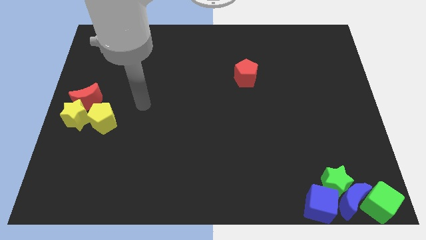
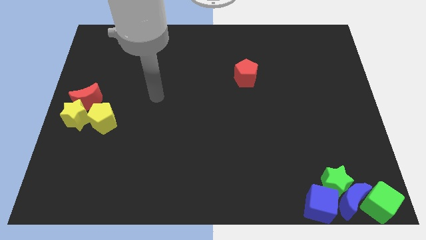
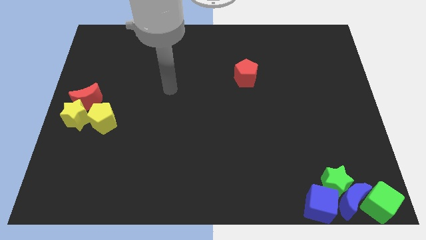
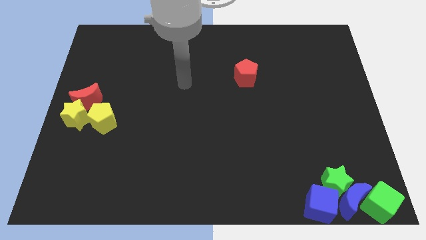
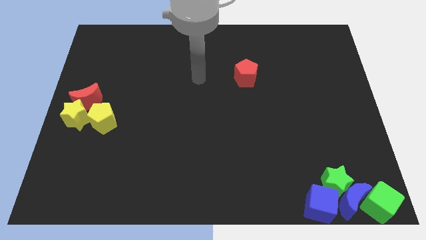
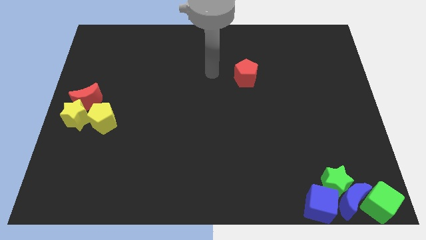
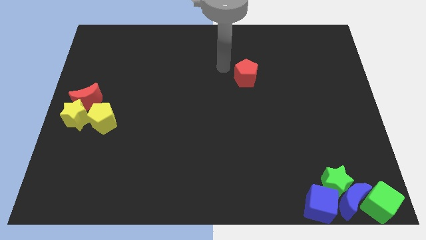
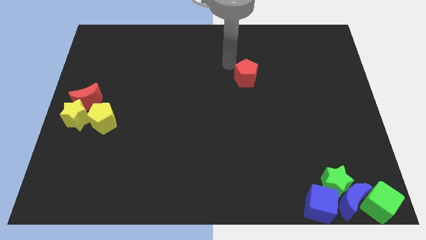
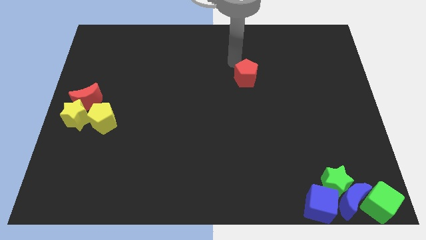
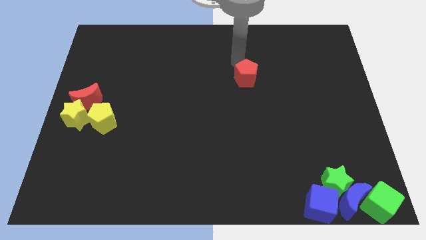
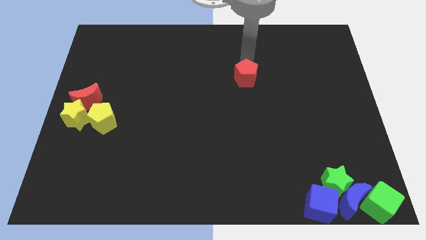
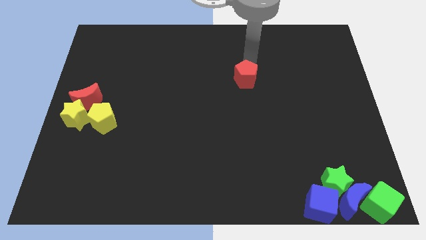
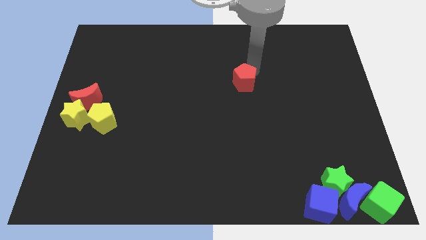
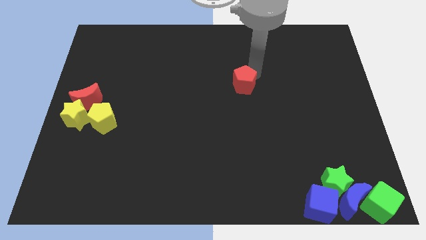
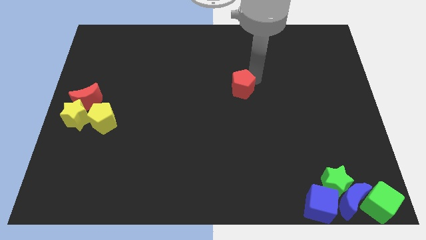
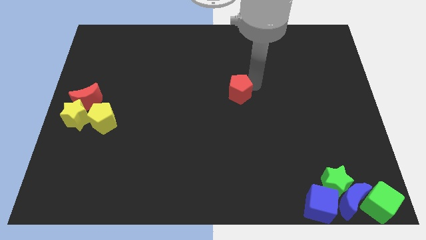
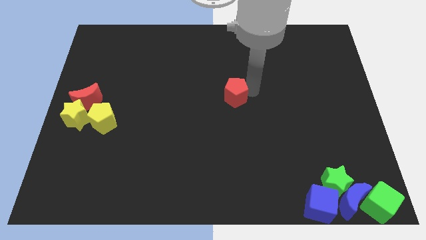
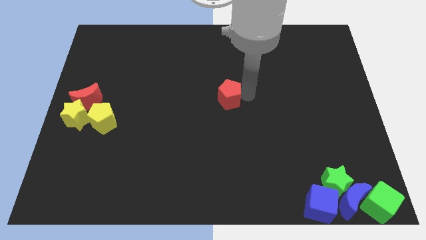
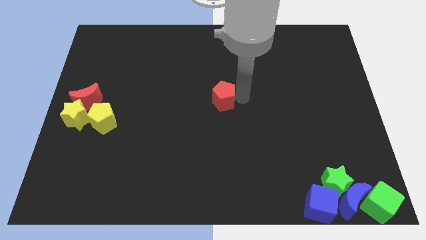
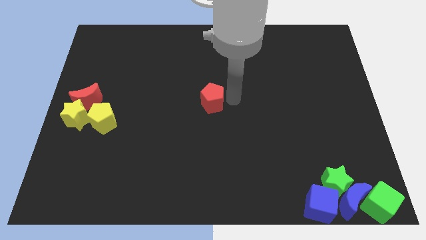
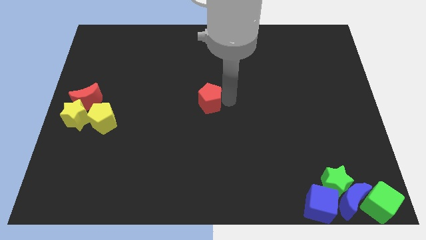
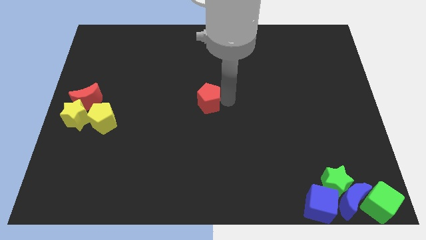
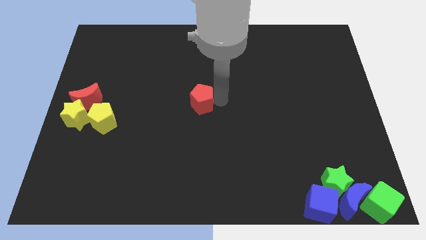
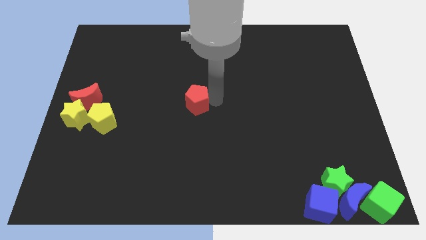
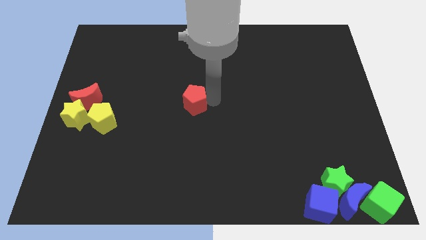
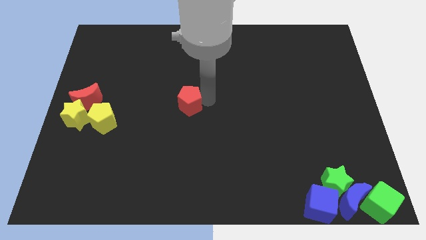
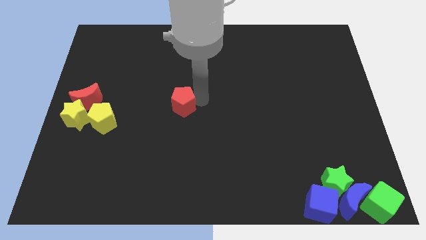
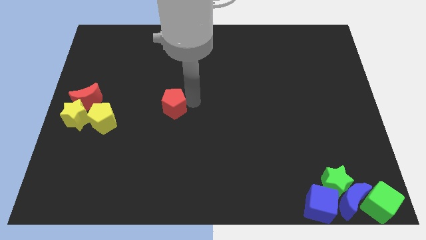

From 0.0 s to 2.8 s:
push the red pentagon towards the left side of the board

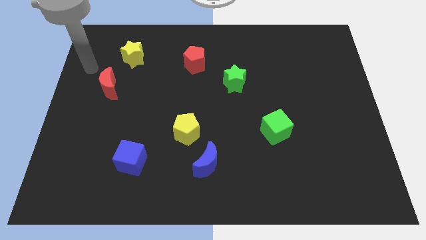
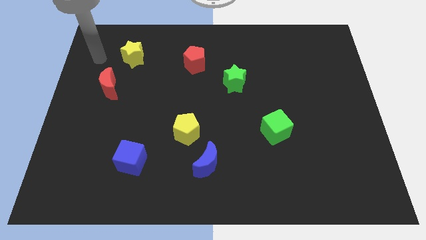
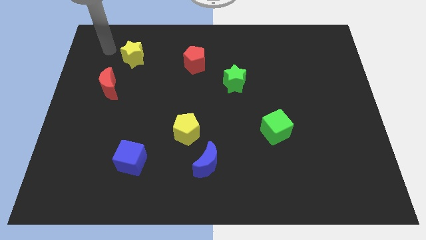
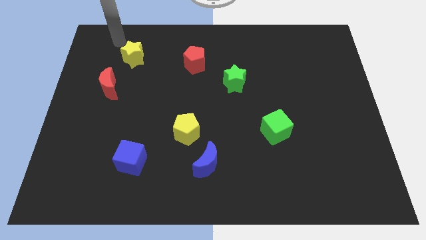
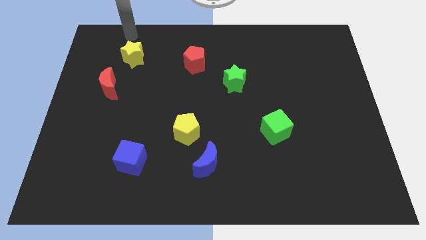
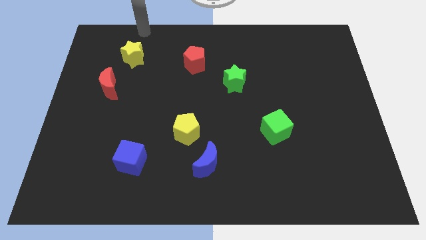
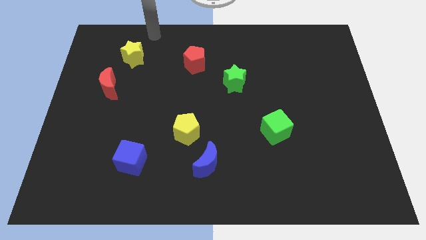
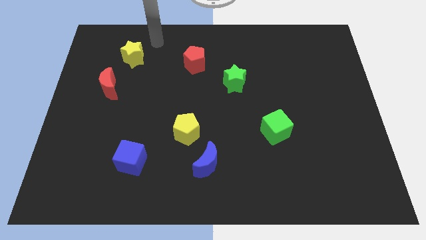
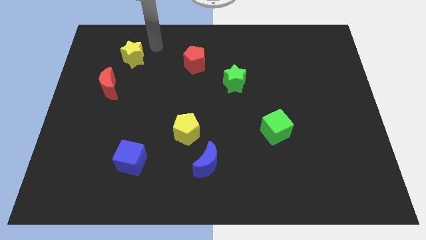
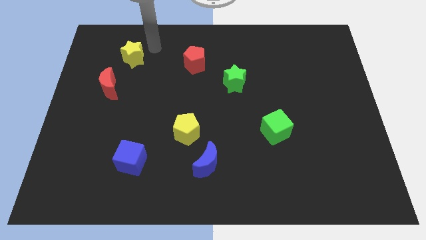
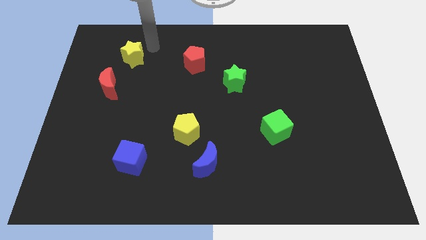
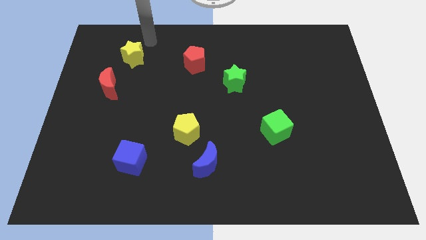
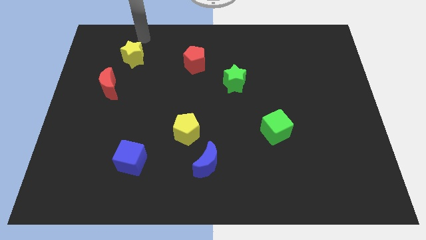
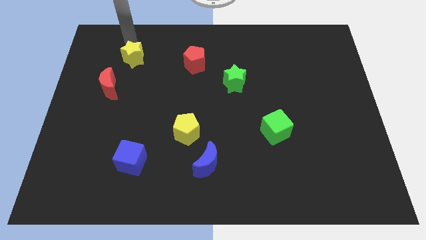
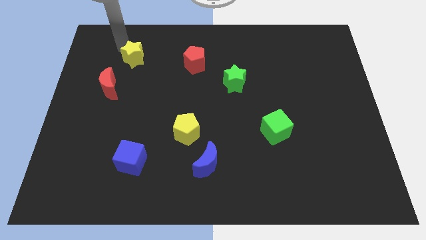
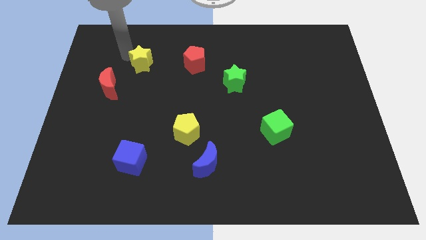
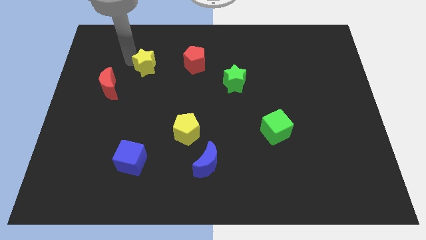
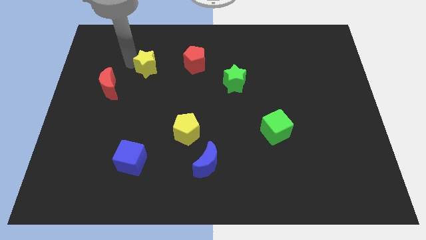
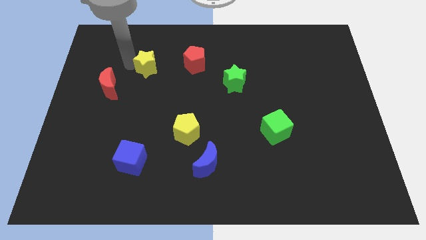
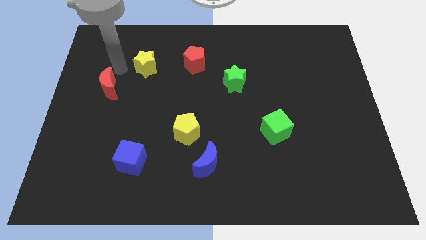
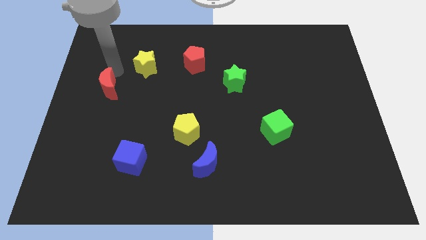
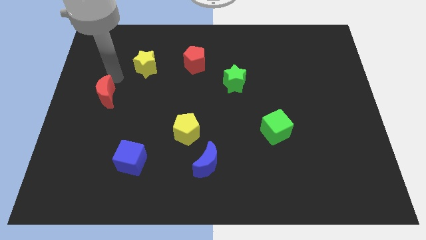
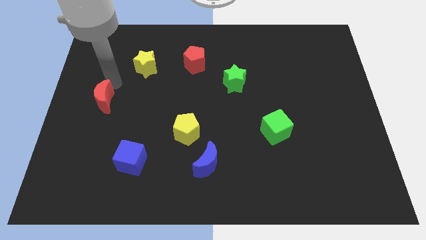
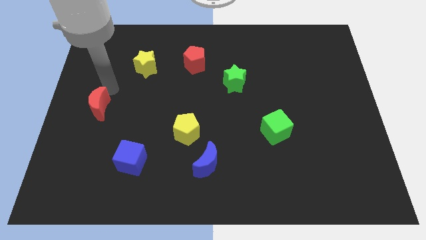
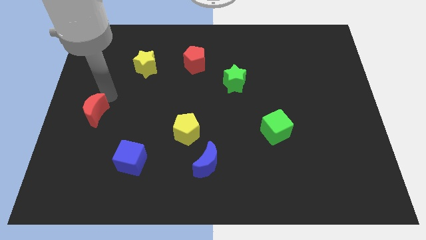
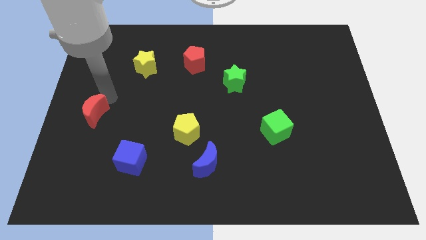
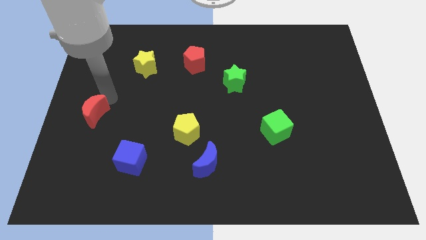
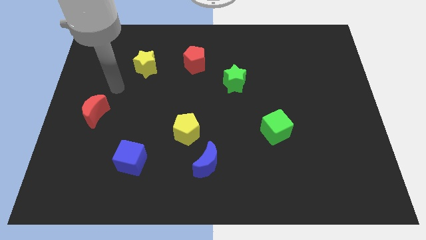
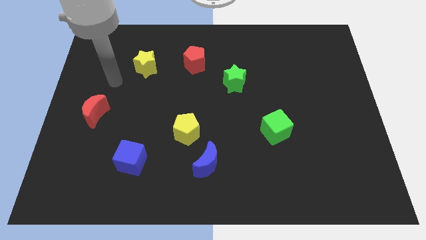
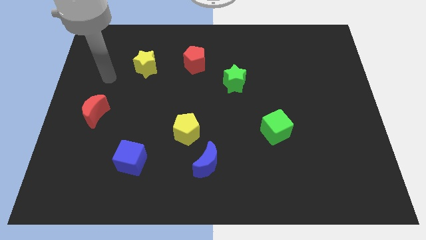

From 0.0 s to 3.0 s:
push the red moon diagonally to the left of the blue moon

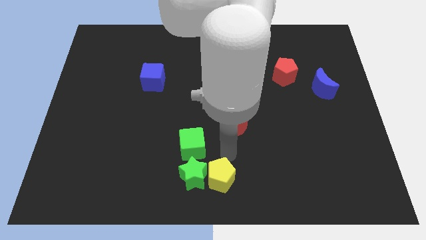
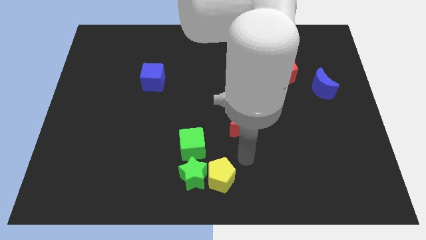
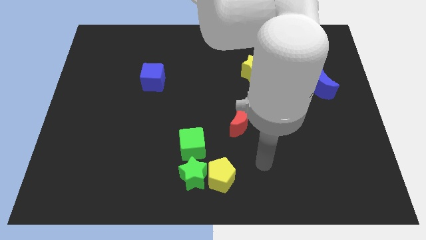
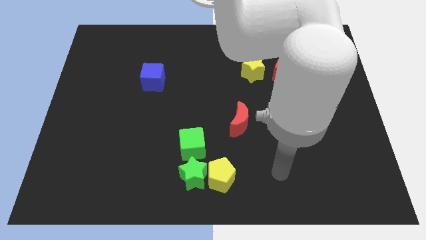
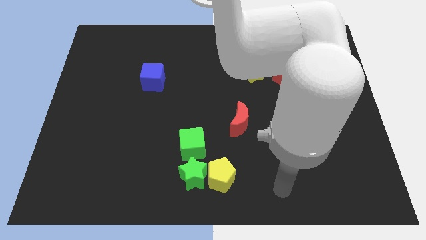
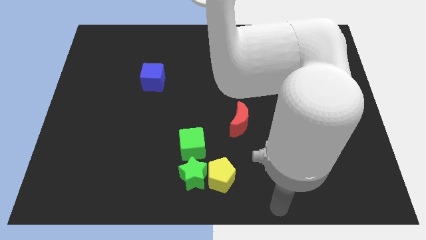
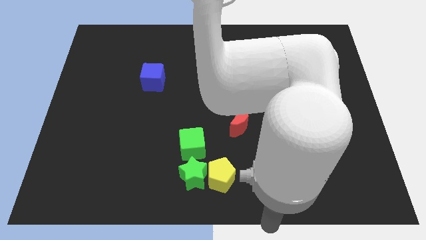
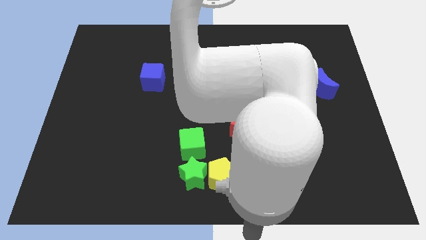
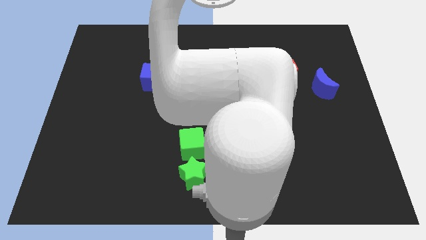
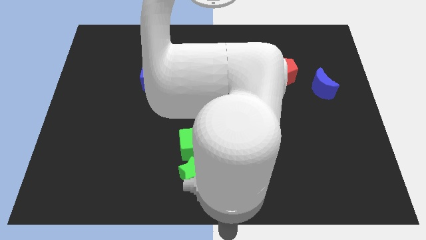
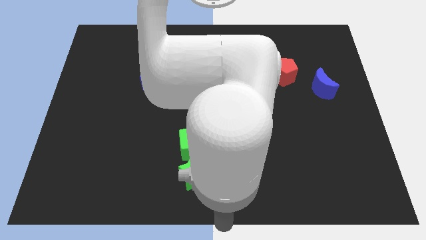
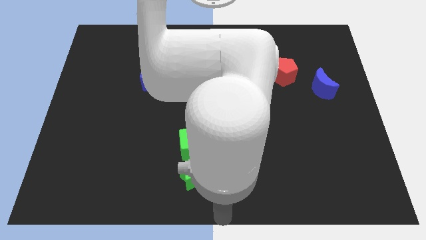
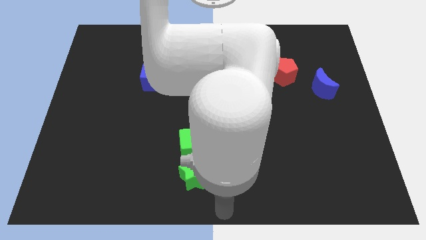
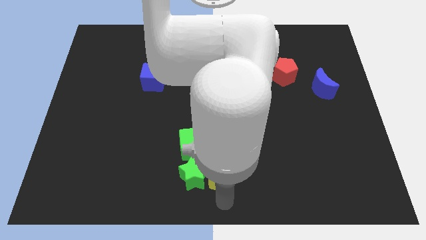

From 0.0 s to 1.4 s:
place your arm below yellow pentagon

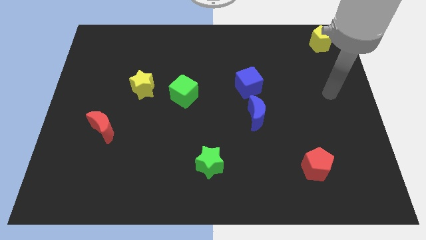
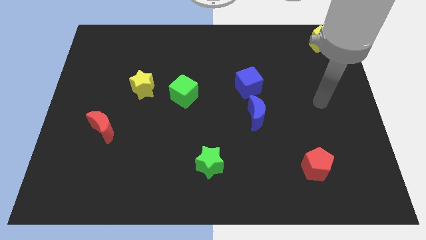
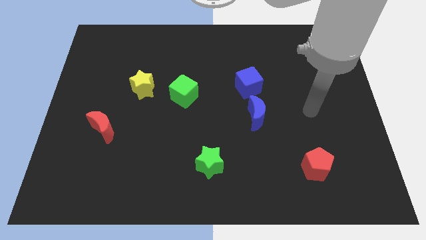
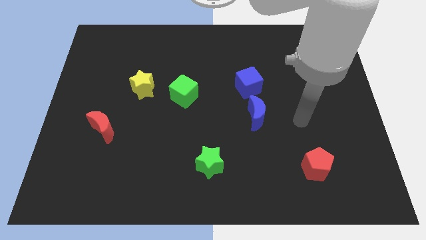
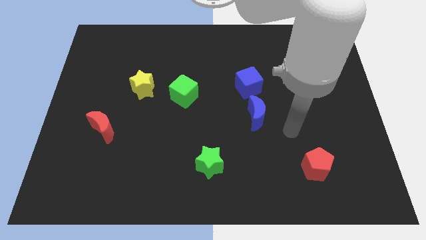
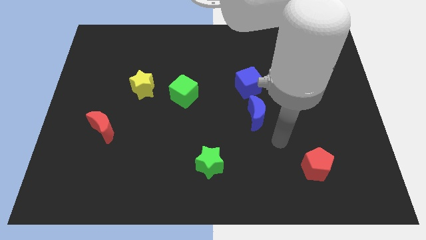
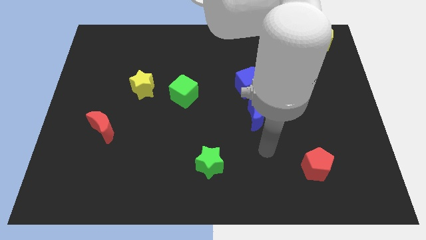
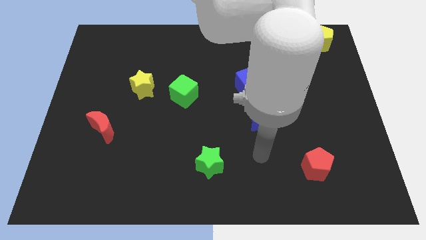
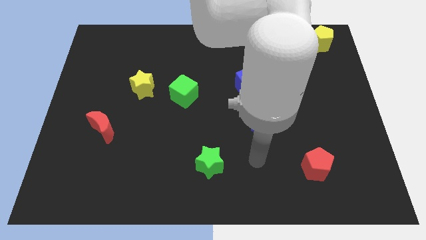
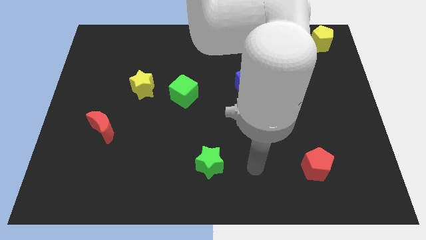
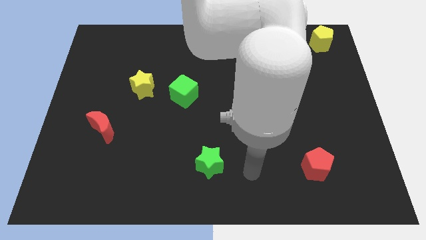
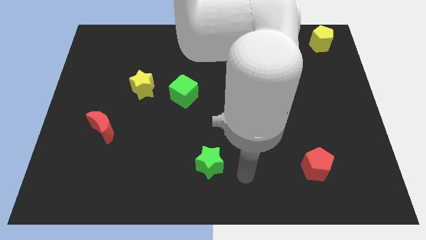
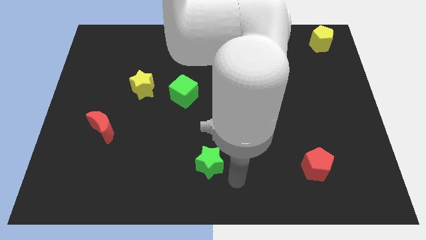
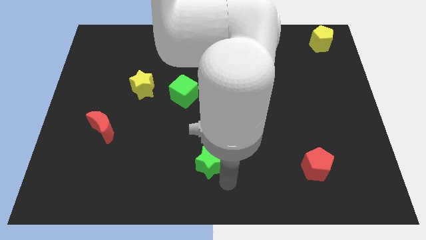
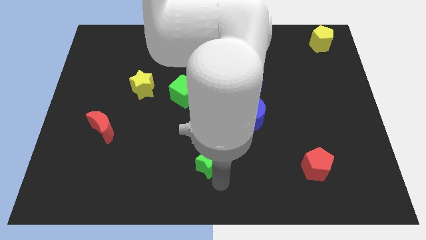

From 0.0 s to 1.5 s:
place your arm at the bottom of the green star

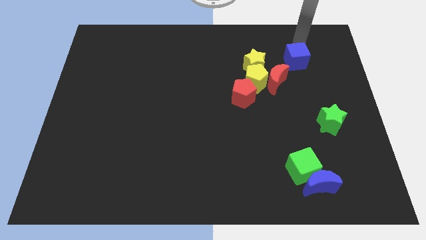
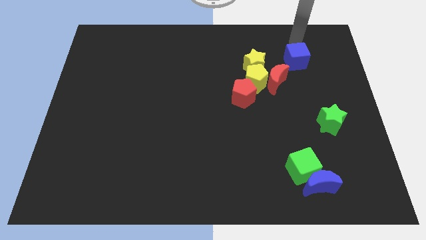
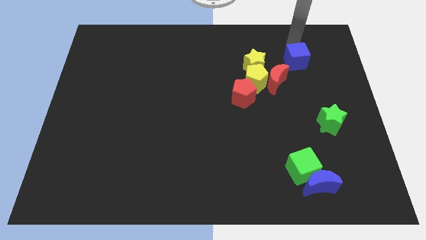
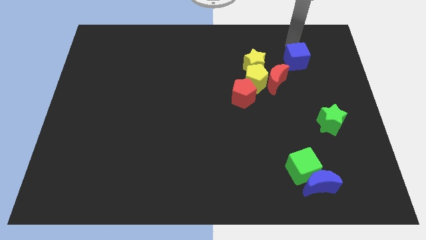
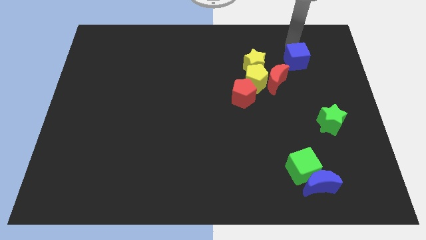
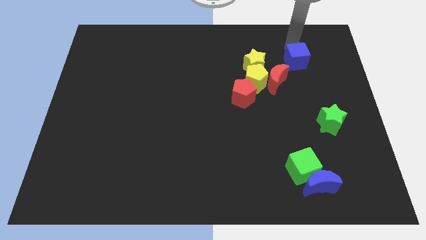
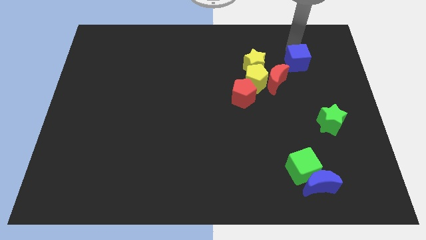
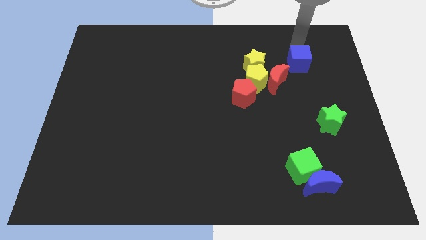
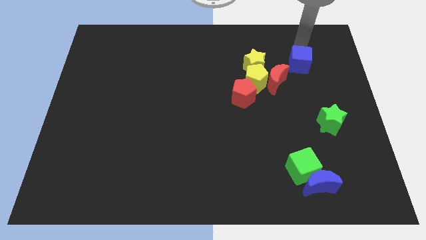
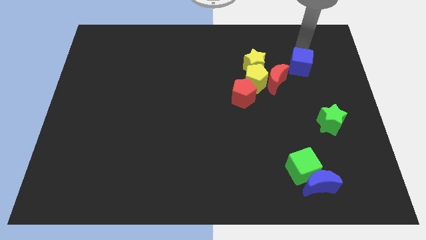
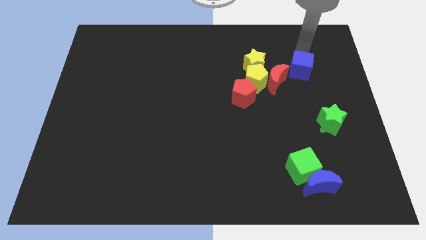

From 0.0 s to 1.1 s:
move the blue cube to the right of the red crescent
